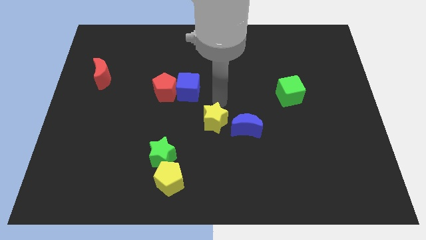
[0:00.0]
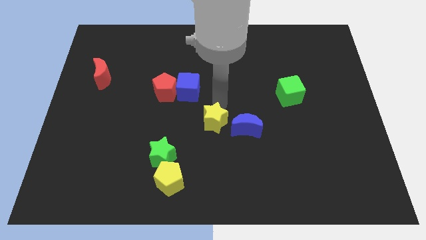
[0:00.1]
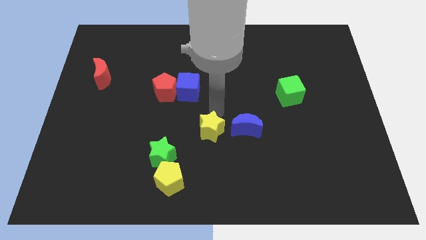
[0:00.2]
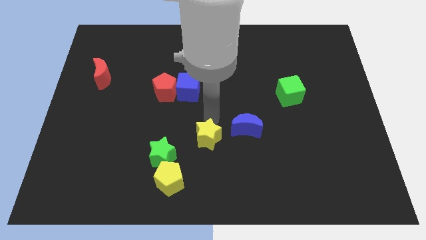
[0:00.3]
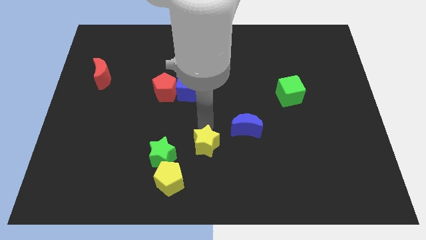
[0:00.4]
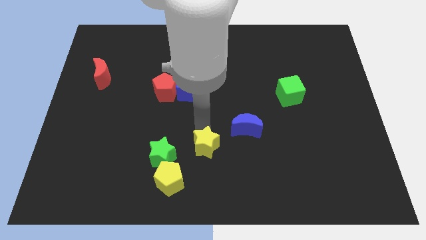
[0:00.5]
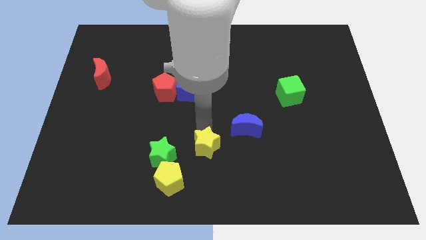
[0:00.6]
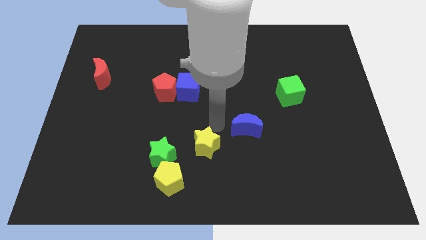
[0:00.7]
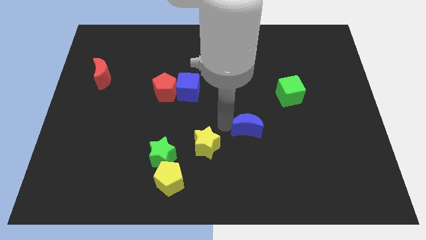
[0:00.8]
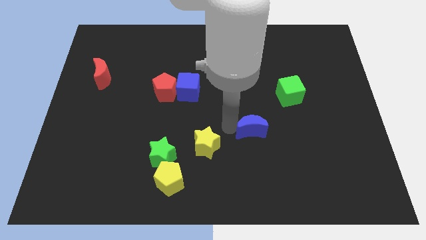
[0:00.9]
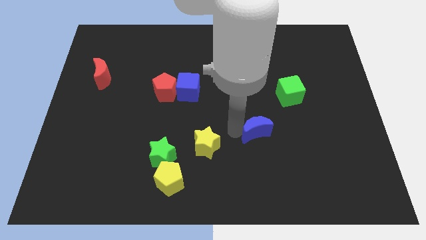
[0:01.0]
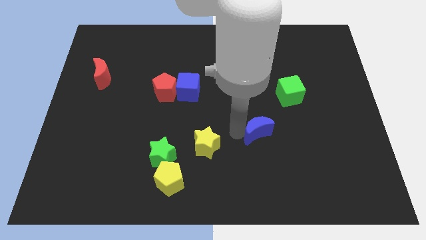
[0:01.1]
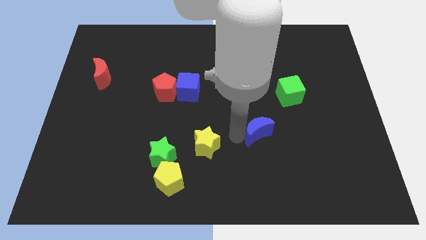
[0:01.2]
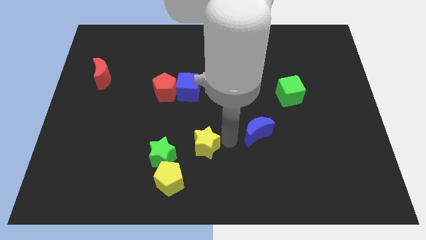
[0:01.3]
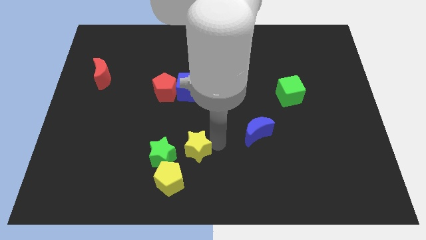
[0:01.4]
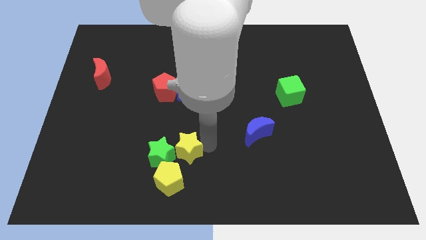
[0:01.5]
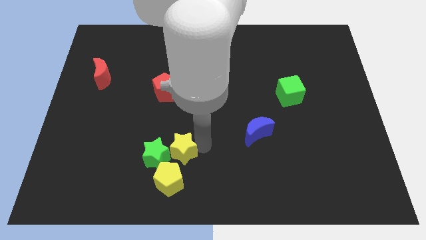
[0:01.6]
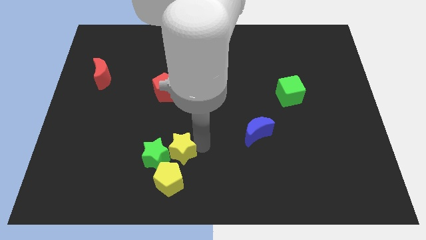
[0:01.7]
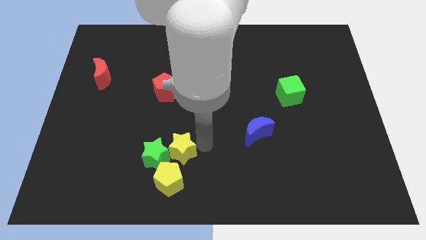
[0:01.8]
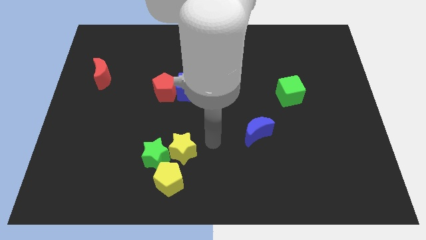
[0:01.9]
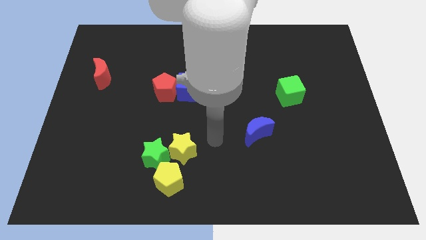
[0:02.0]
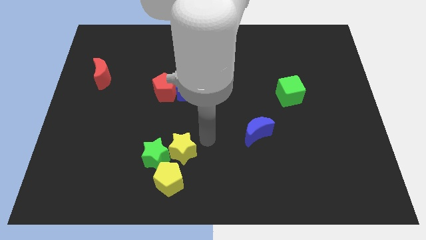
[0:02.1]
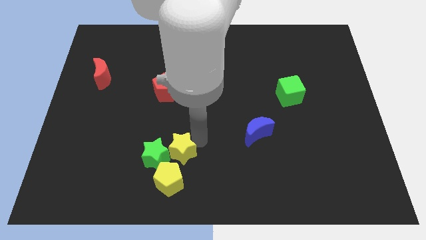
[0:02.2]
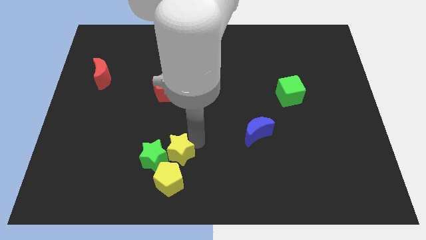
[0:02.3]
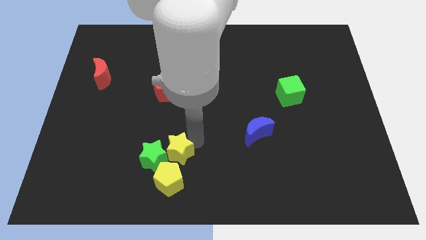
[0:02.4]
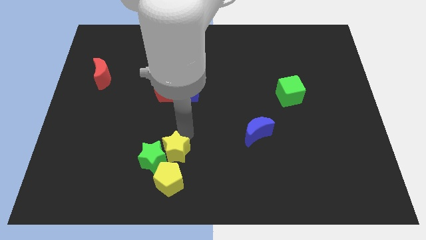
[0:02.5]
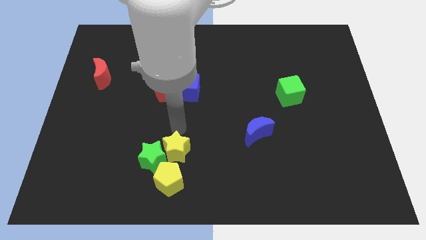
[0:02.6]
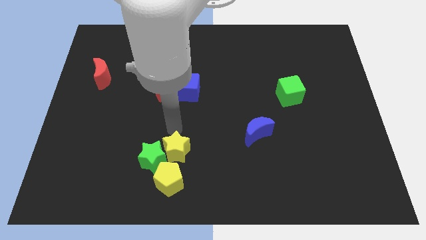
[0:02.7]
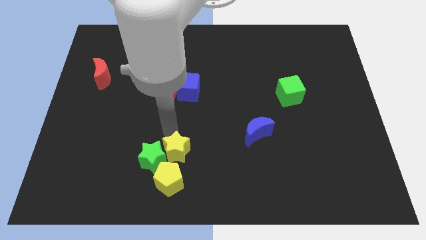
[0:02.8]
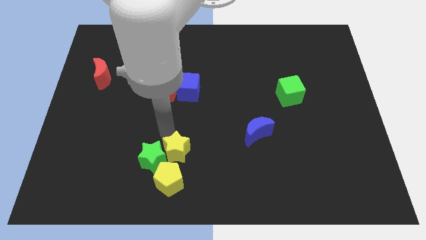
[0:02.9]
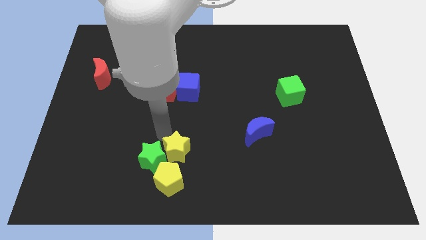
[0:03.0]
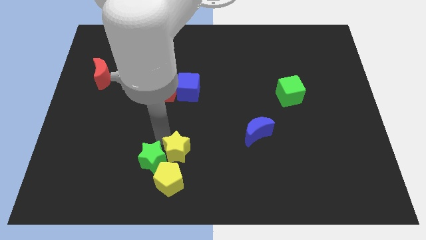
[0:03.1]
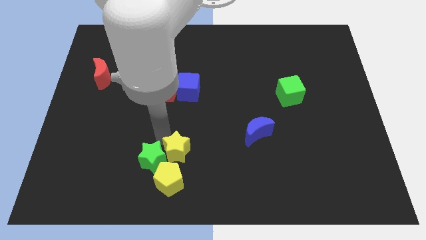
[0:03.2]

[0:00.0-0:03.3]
place yellow star to the top of yellow pentagon

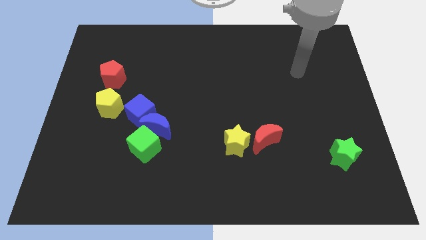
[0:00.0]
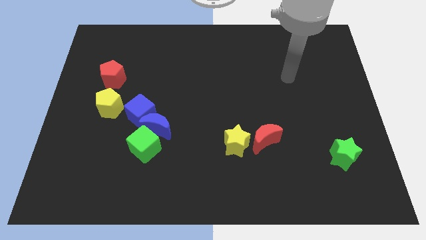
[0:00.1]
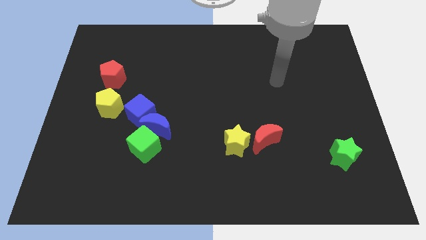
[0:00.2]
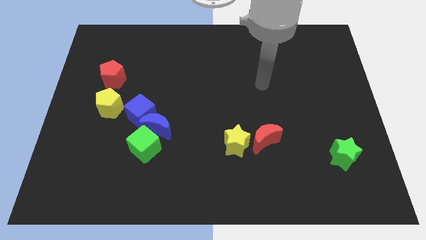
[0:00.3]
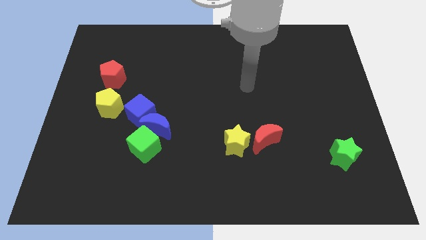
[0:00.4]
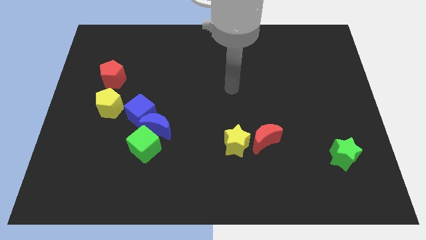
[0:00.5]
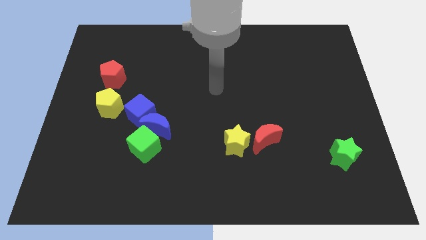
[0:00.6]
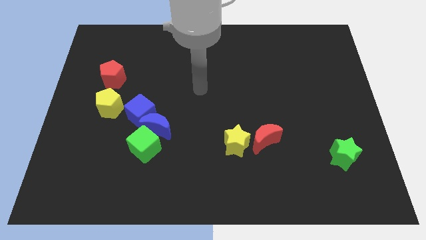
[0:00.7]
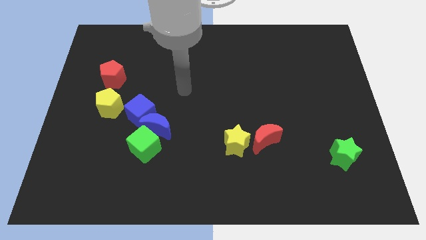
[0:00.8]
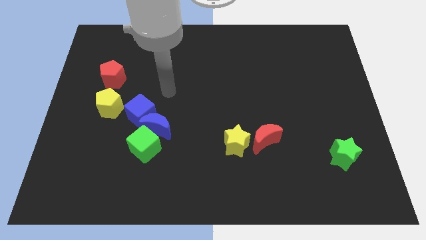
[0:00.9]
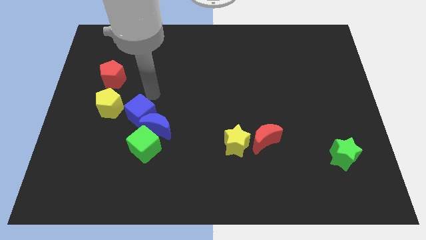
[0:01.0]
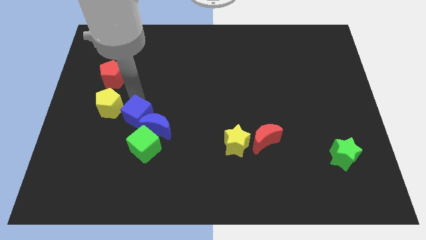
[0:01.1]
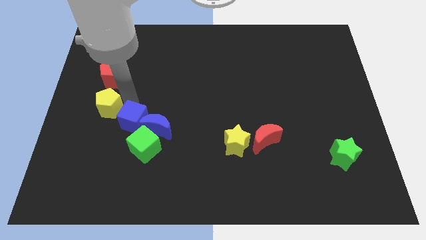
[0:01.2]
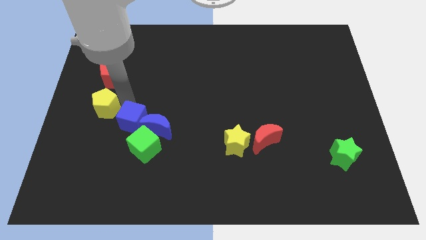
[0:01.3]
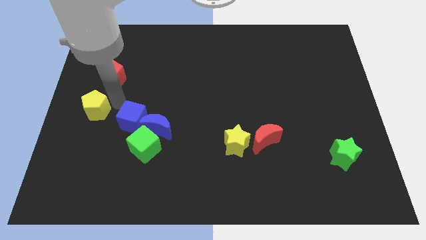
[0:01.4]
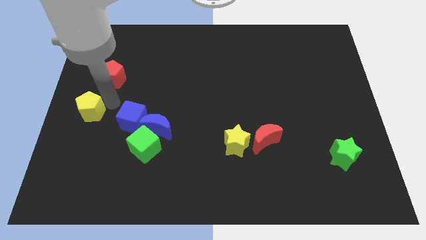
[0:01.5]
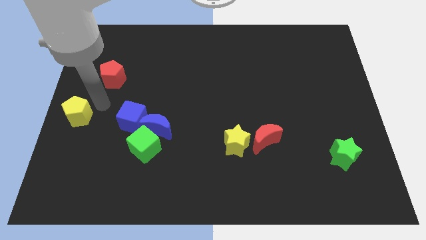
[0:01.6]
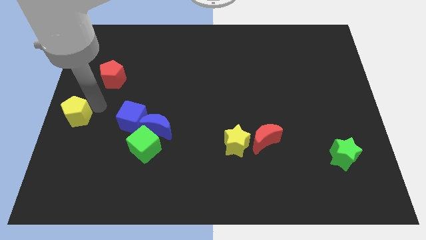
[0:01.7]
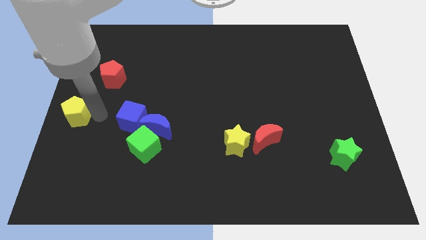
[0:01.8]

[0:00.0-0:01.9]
push the yellow pentagon to the left center of the board

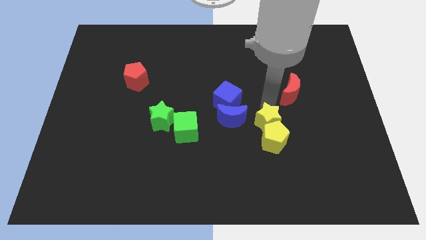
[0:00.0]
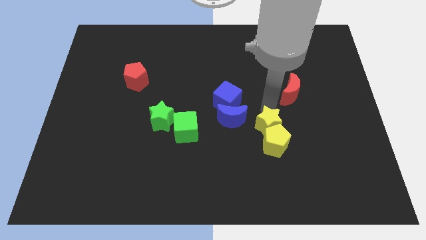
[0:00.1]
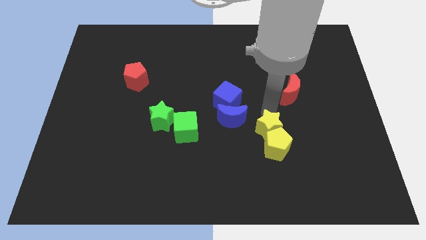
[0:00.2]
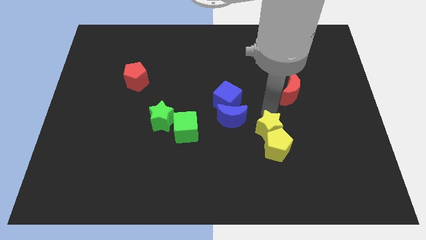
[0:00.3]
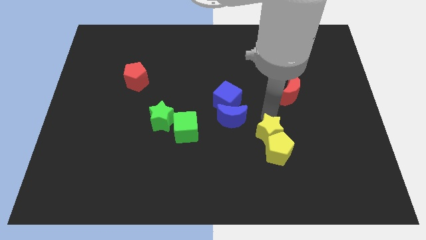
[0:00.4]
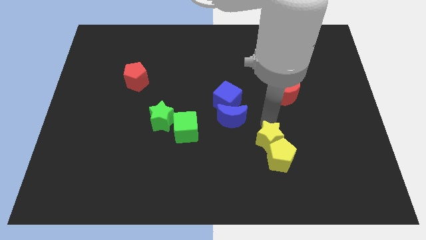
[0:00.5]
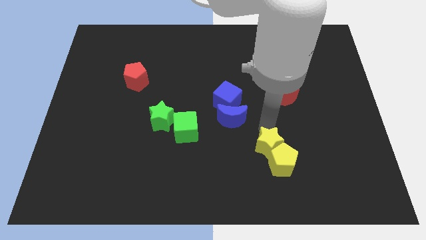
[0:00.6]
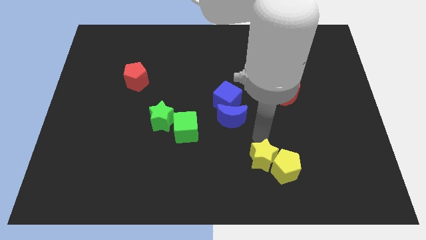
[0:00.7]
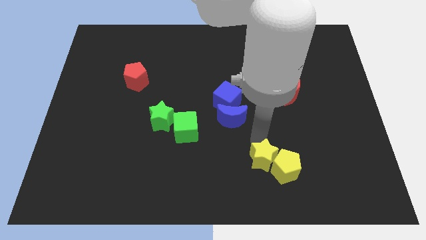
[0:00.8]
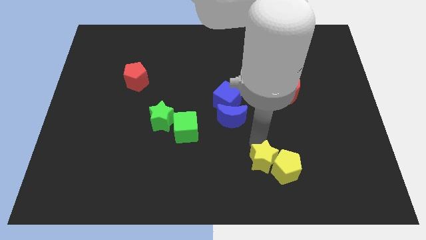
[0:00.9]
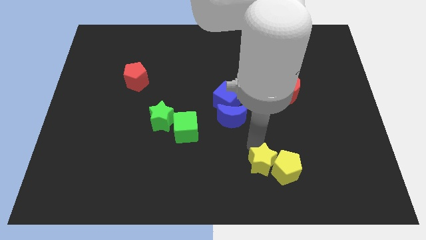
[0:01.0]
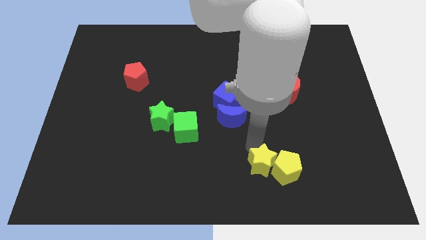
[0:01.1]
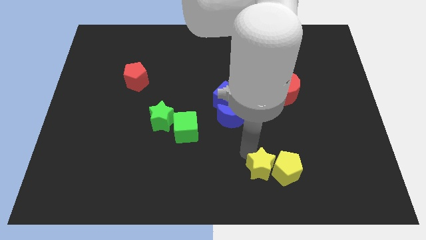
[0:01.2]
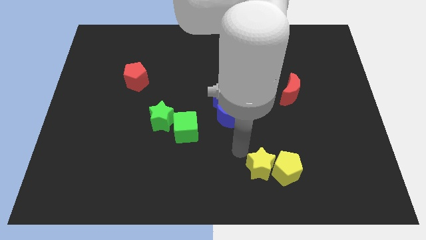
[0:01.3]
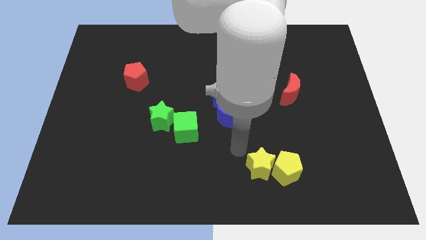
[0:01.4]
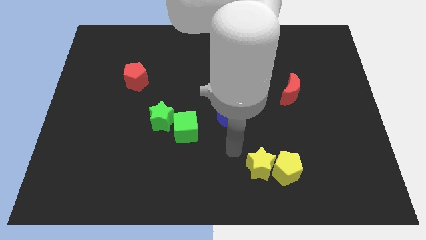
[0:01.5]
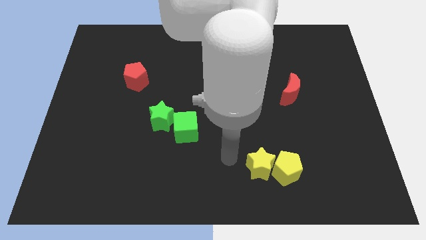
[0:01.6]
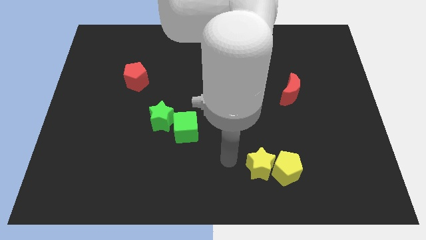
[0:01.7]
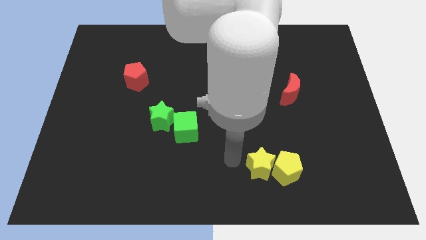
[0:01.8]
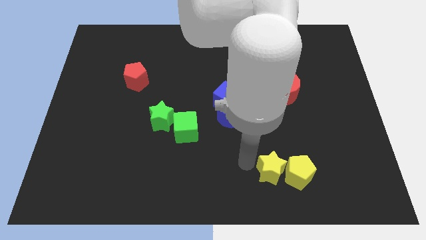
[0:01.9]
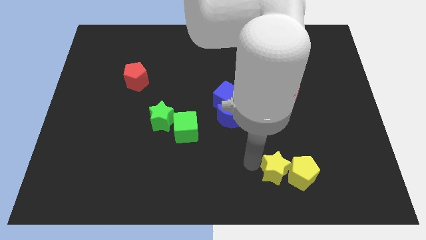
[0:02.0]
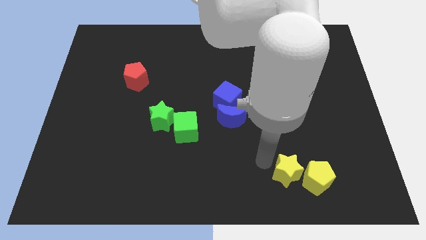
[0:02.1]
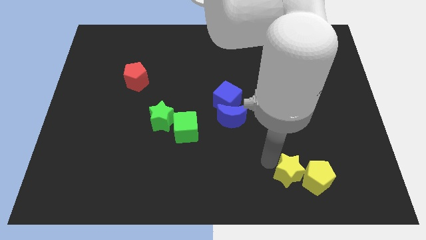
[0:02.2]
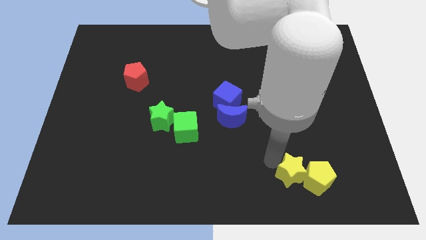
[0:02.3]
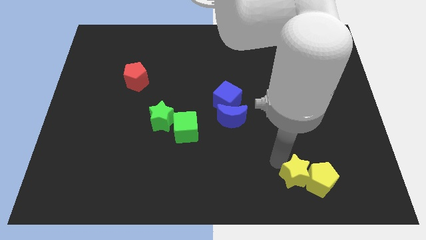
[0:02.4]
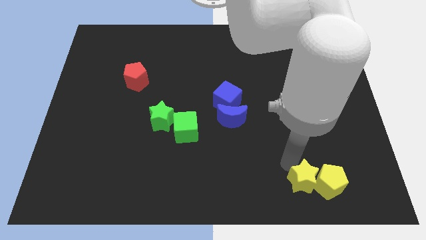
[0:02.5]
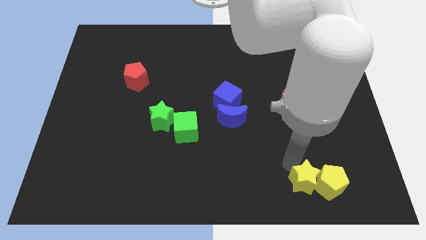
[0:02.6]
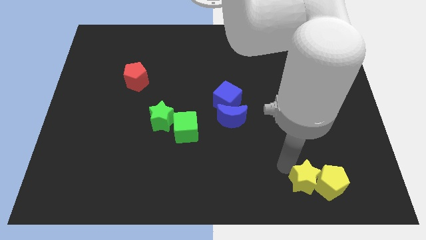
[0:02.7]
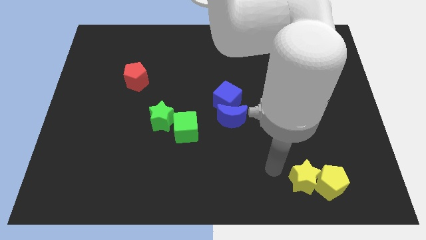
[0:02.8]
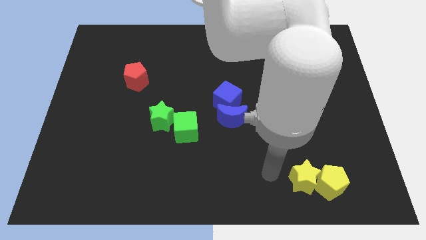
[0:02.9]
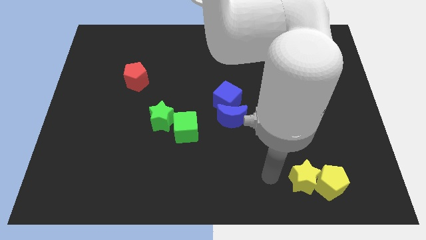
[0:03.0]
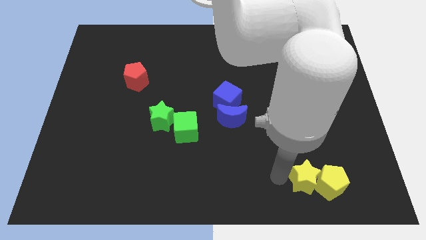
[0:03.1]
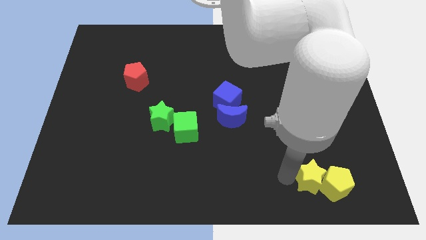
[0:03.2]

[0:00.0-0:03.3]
drag both the yellow blocks towards the bottom right side of the board

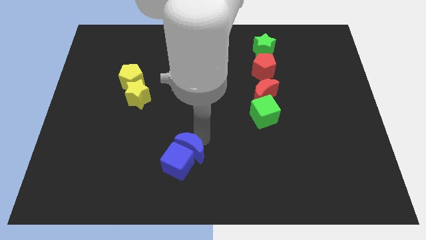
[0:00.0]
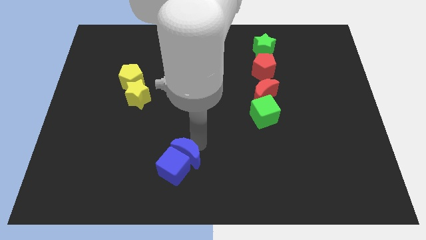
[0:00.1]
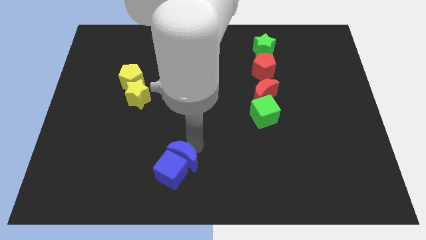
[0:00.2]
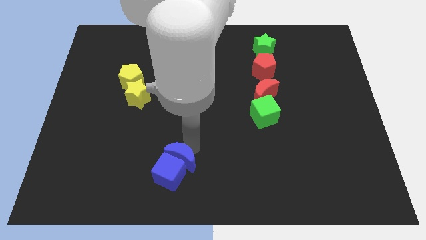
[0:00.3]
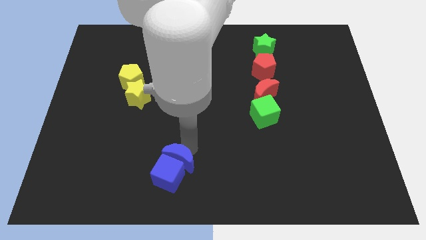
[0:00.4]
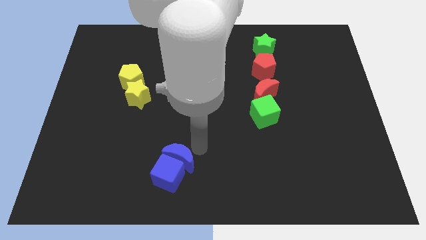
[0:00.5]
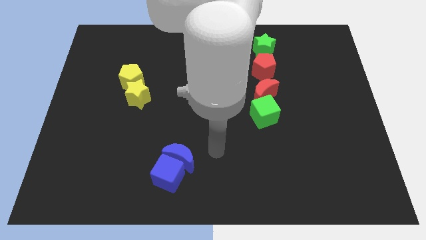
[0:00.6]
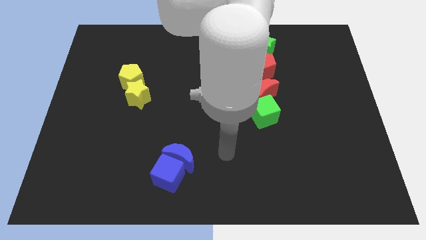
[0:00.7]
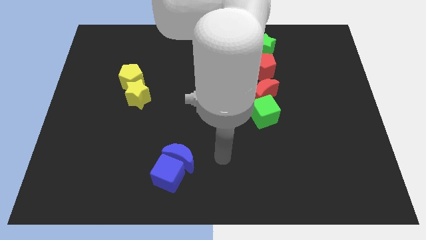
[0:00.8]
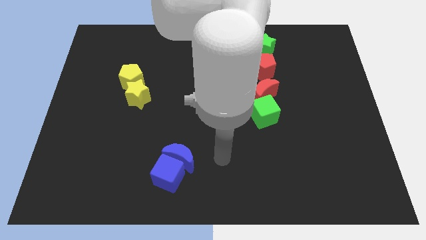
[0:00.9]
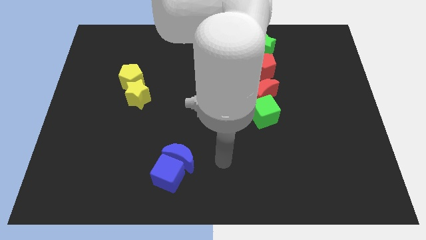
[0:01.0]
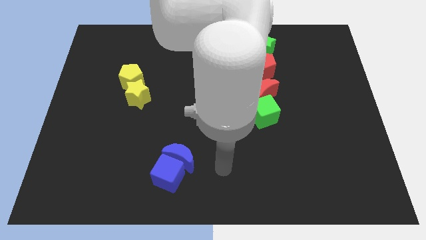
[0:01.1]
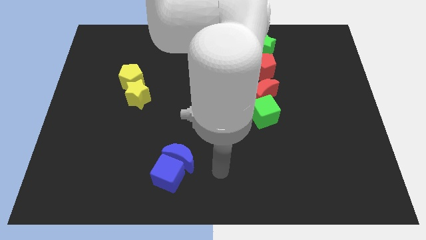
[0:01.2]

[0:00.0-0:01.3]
move blue blocks to the bottom of the board
